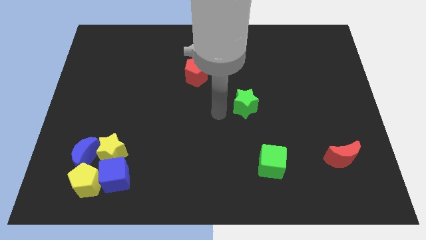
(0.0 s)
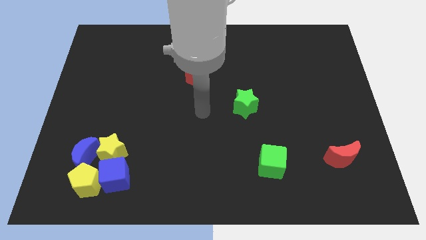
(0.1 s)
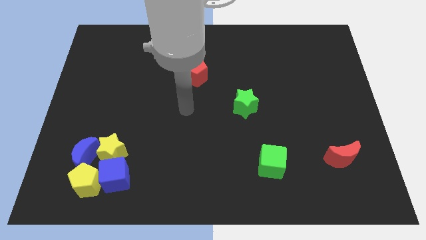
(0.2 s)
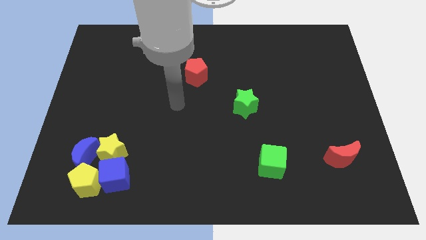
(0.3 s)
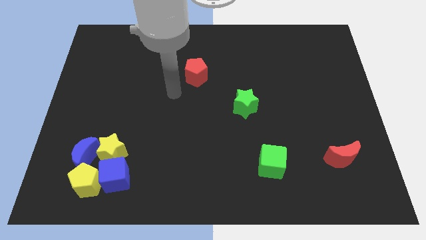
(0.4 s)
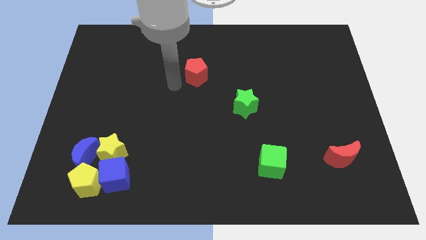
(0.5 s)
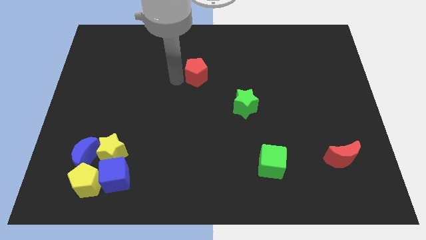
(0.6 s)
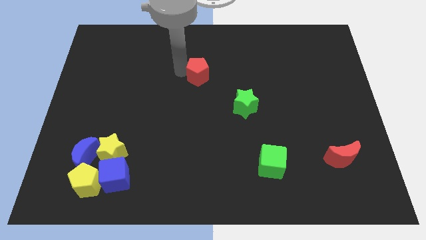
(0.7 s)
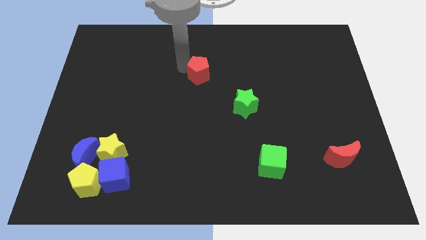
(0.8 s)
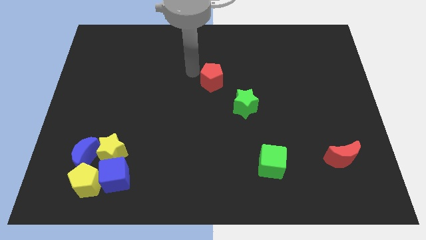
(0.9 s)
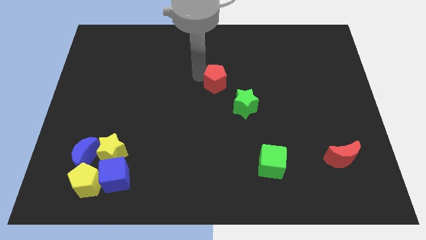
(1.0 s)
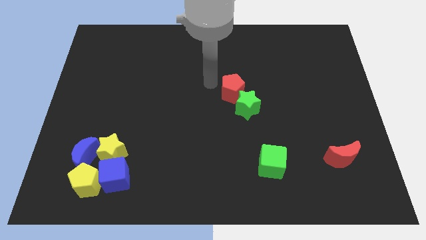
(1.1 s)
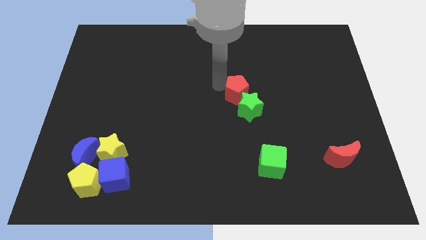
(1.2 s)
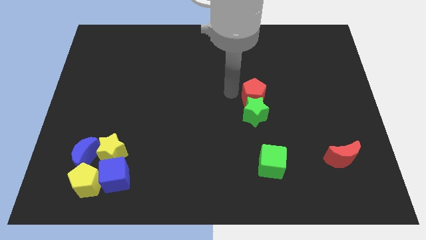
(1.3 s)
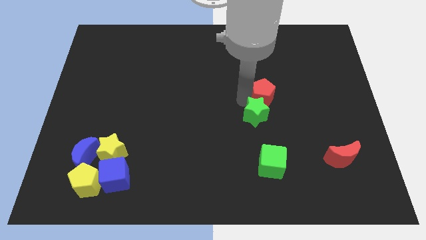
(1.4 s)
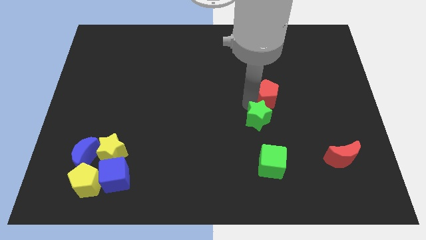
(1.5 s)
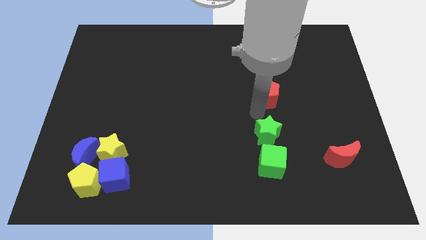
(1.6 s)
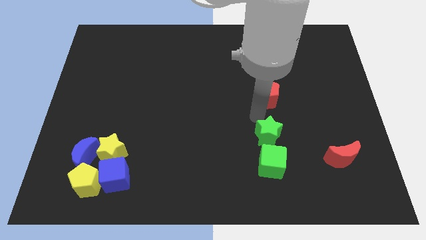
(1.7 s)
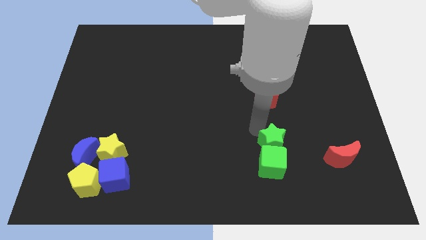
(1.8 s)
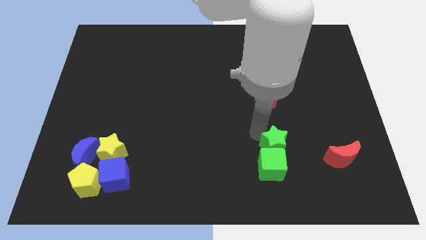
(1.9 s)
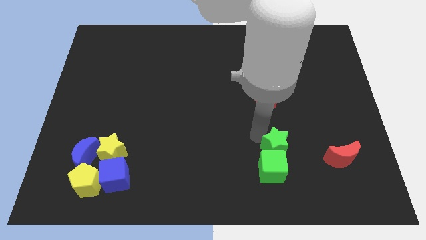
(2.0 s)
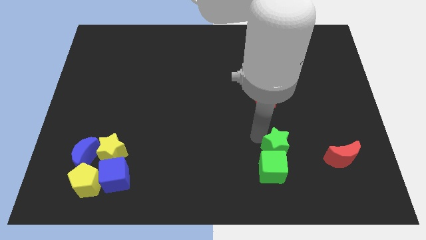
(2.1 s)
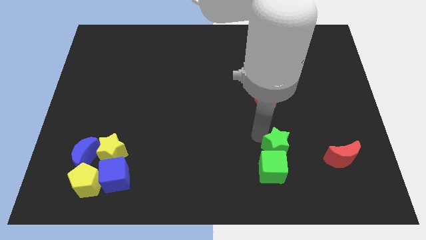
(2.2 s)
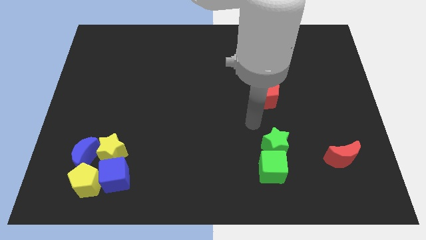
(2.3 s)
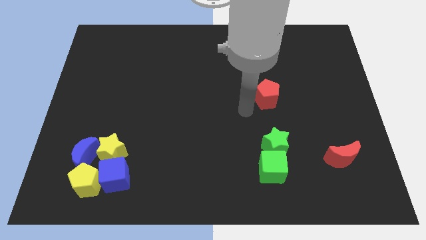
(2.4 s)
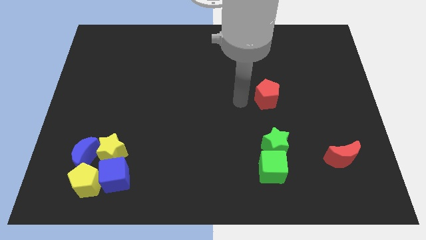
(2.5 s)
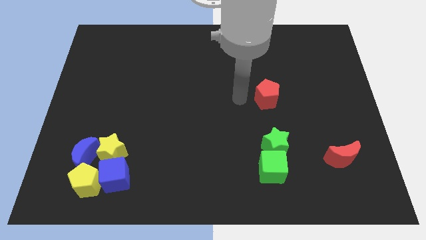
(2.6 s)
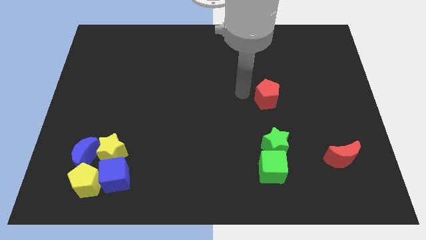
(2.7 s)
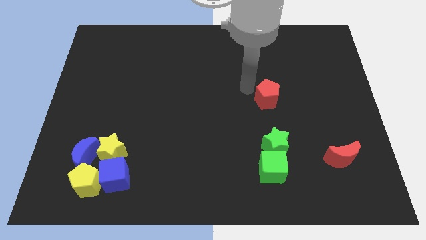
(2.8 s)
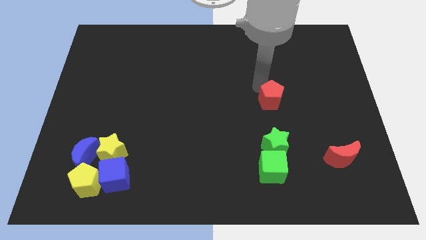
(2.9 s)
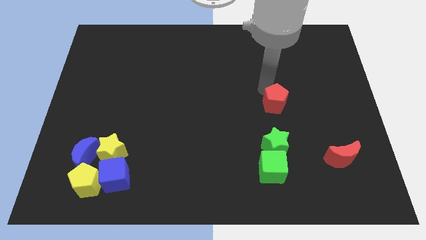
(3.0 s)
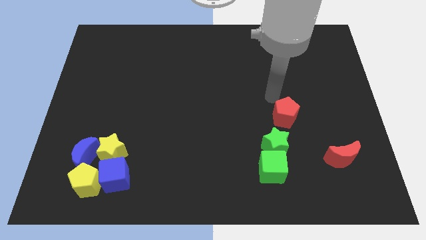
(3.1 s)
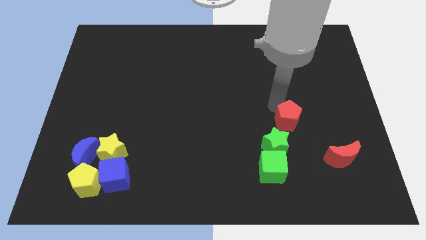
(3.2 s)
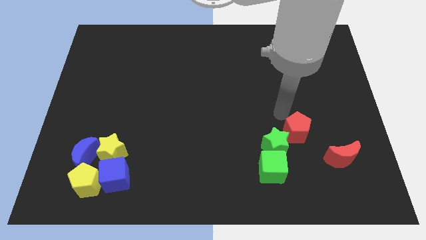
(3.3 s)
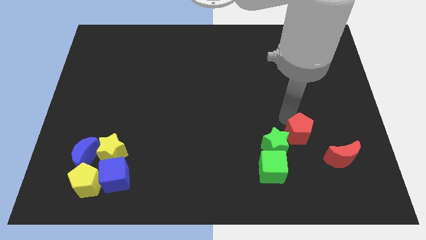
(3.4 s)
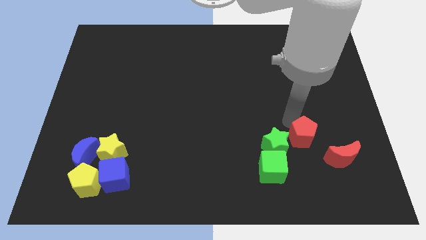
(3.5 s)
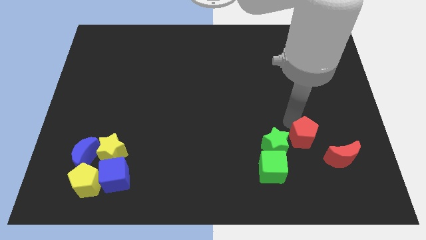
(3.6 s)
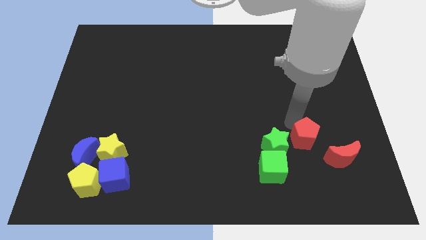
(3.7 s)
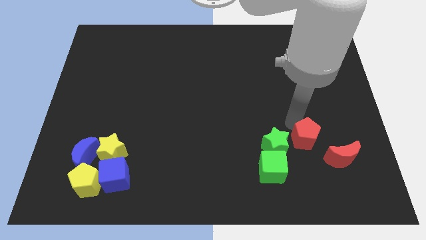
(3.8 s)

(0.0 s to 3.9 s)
place the red pentagon to the right of the green star

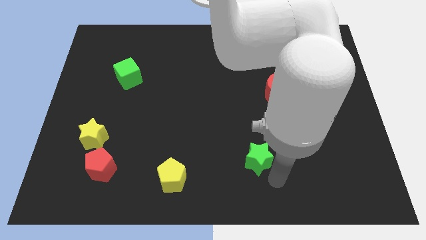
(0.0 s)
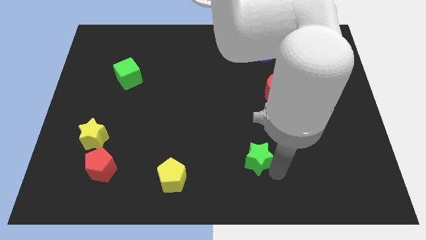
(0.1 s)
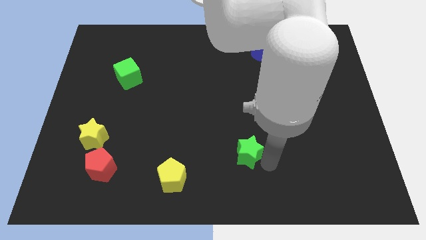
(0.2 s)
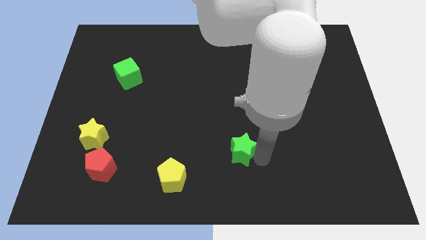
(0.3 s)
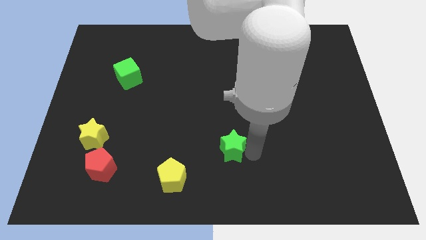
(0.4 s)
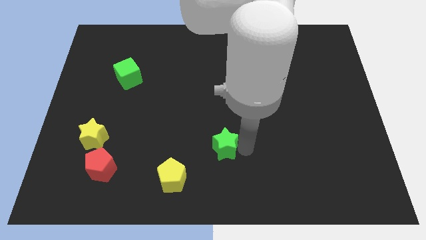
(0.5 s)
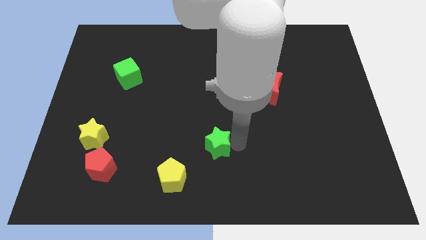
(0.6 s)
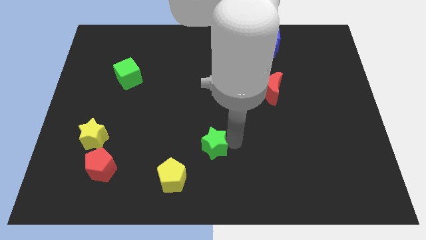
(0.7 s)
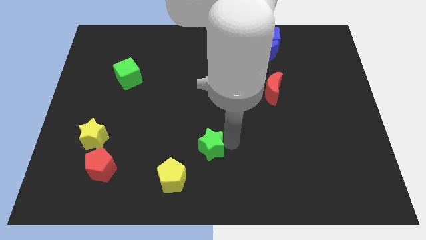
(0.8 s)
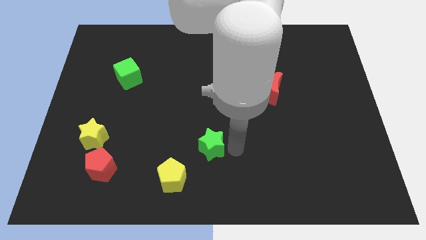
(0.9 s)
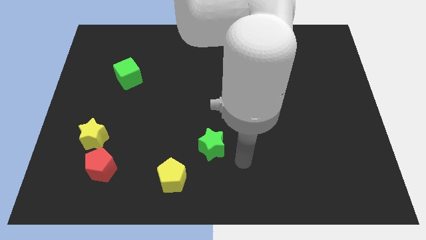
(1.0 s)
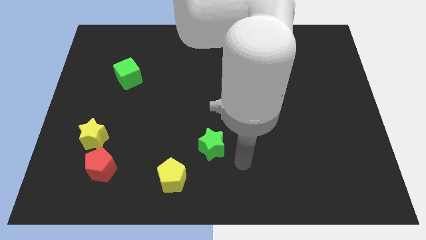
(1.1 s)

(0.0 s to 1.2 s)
place the green star to the top right of the yellow pentagon

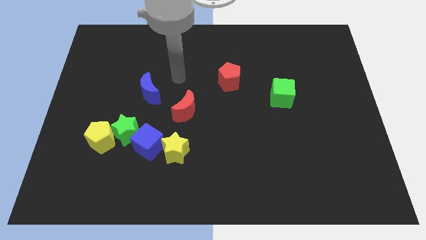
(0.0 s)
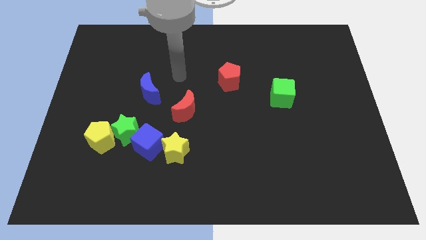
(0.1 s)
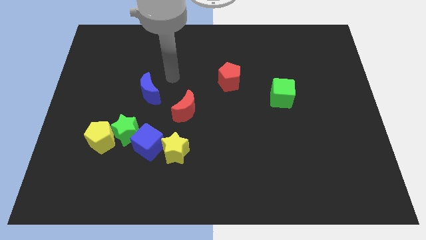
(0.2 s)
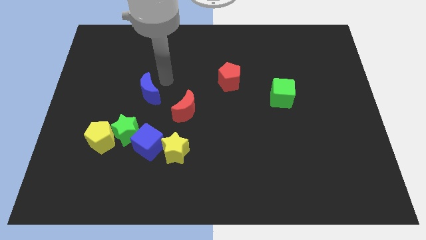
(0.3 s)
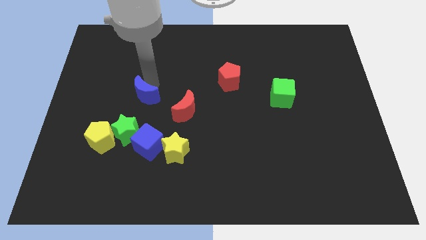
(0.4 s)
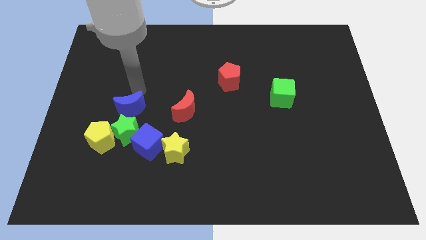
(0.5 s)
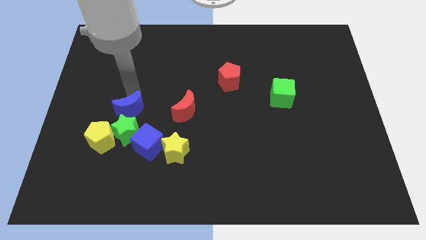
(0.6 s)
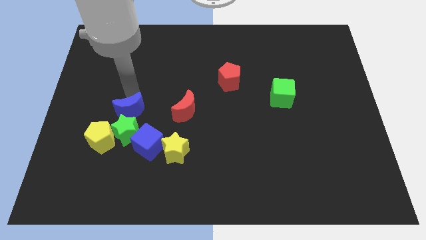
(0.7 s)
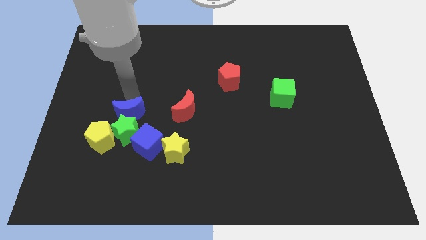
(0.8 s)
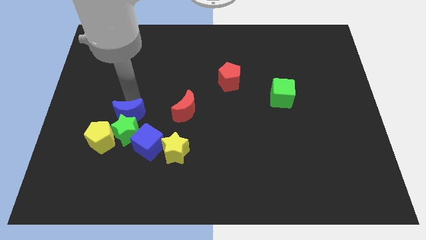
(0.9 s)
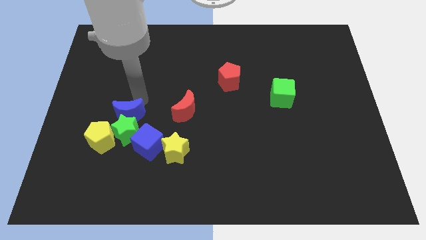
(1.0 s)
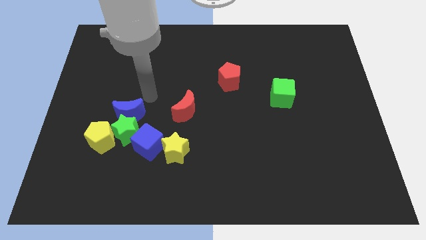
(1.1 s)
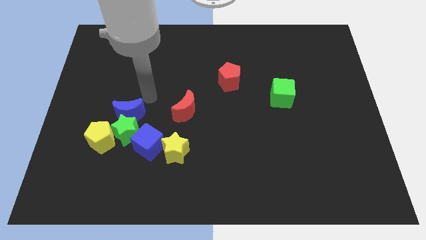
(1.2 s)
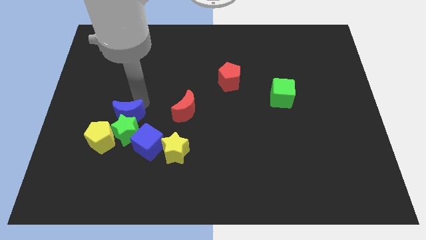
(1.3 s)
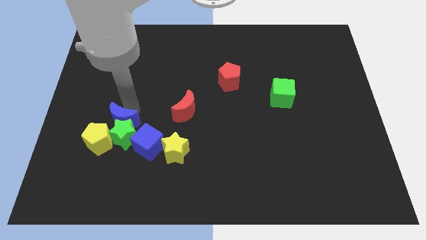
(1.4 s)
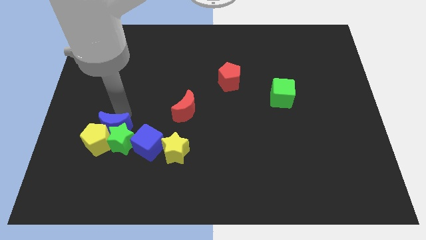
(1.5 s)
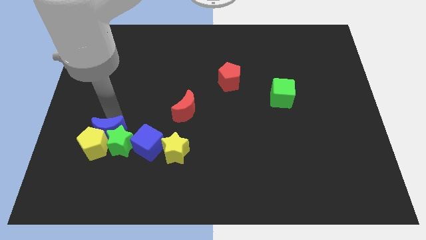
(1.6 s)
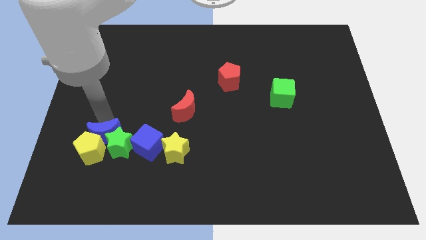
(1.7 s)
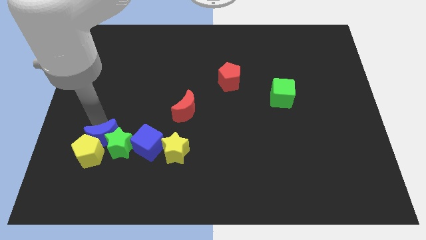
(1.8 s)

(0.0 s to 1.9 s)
push the blue moon into the green star and yellow pentagon

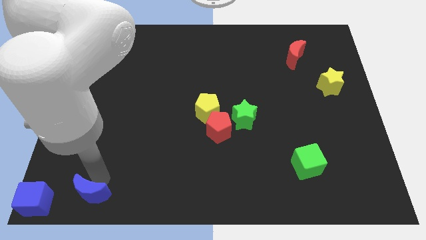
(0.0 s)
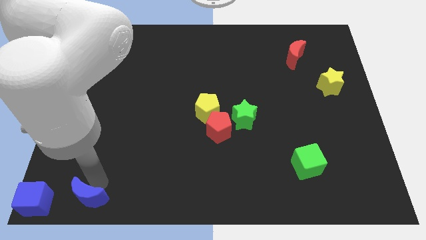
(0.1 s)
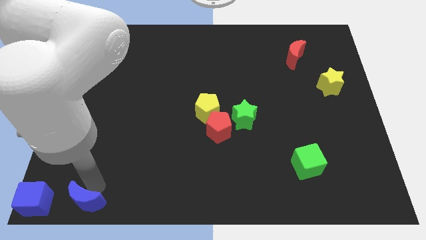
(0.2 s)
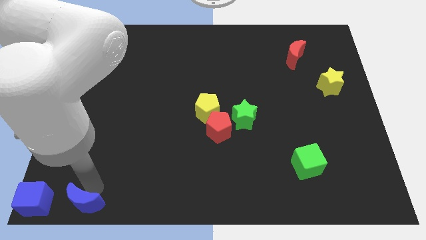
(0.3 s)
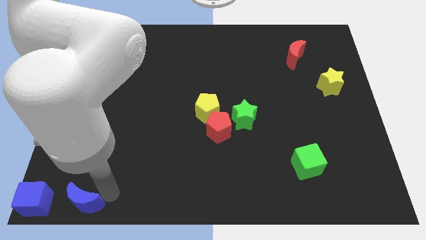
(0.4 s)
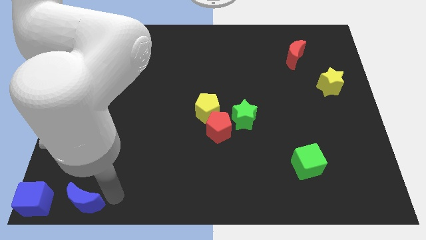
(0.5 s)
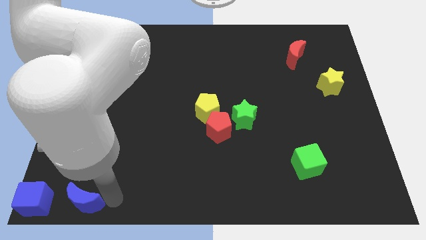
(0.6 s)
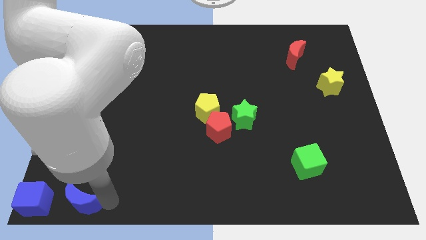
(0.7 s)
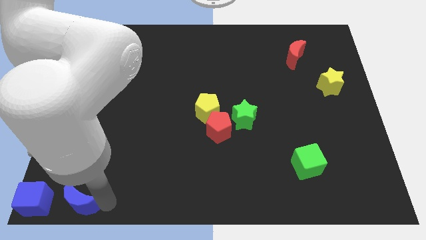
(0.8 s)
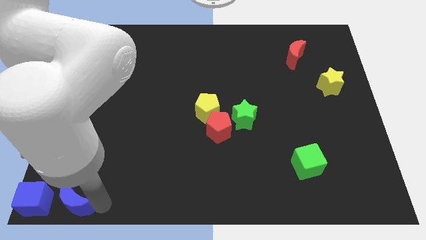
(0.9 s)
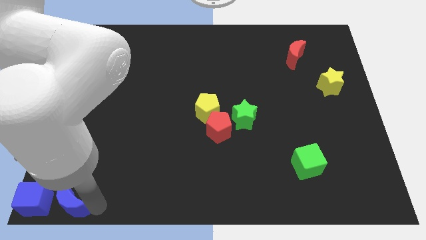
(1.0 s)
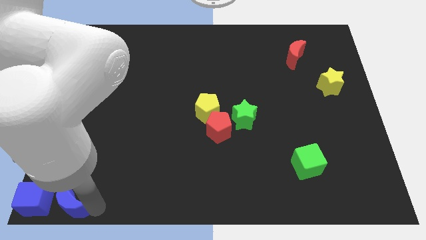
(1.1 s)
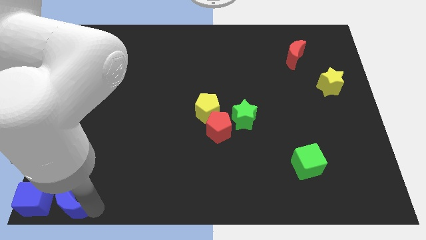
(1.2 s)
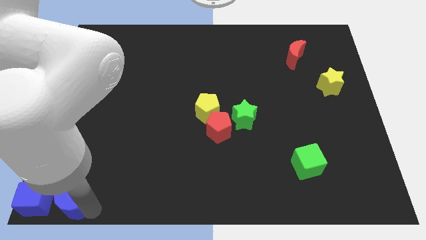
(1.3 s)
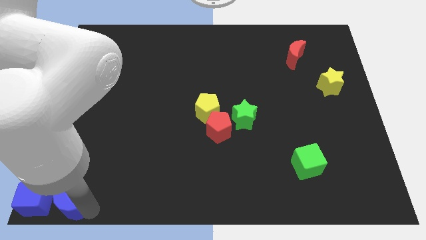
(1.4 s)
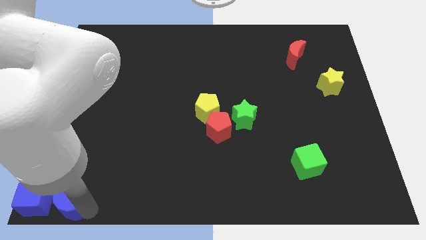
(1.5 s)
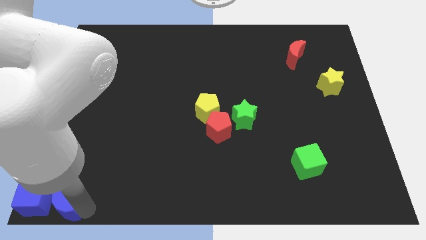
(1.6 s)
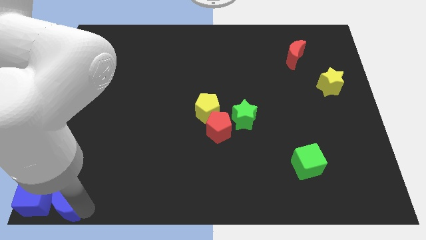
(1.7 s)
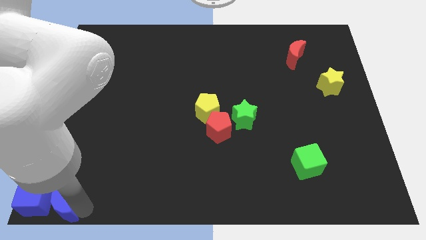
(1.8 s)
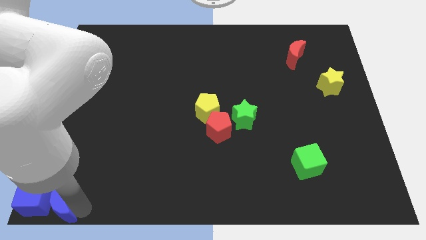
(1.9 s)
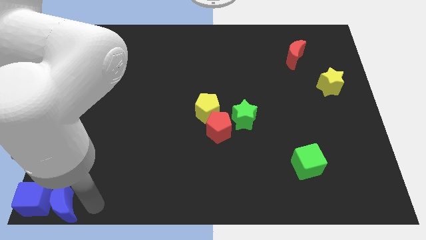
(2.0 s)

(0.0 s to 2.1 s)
move the blue moon close to the right side of the blue cube
